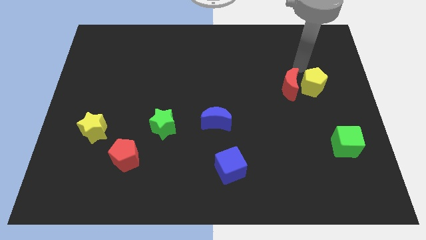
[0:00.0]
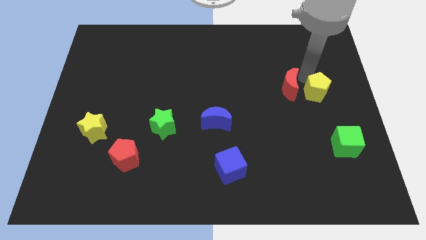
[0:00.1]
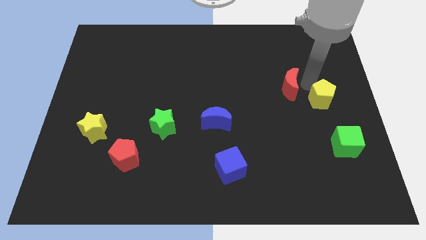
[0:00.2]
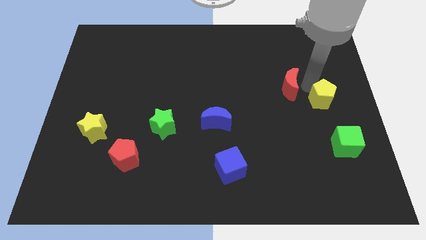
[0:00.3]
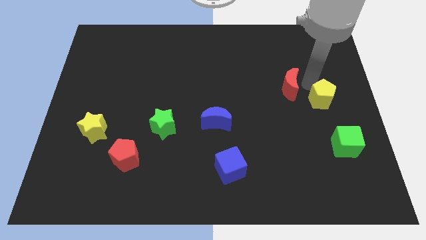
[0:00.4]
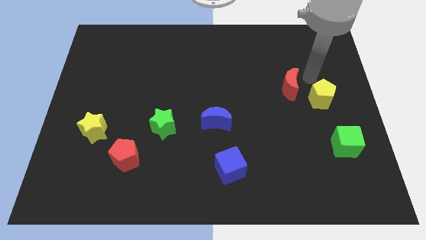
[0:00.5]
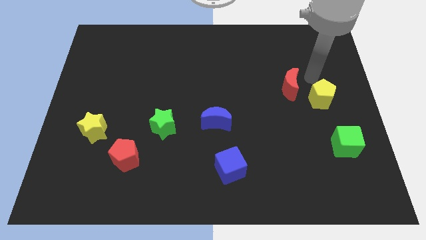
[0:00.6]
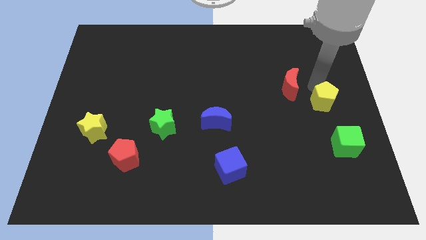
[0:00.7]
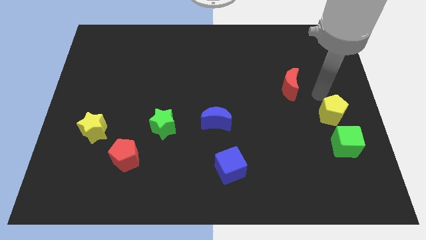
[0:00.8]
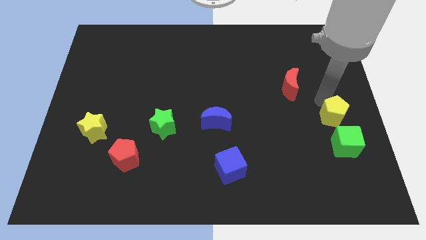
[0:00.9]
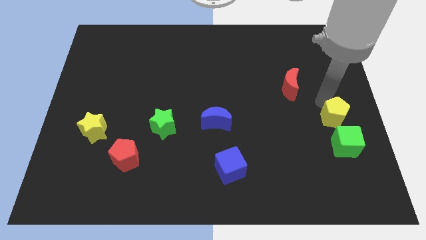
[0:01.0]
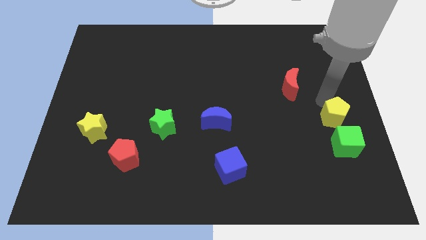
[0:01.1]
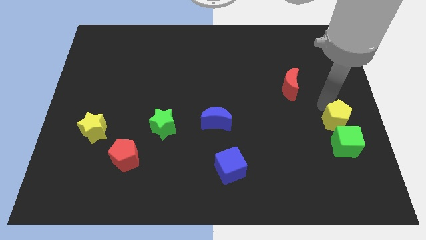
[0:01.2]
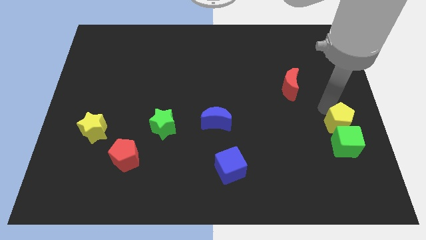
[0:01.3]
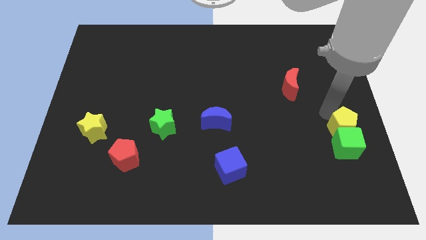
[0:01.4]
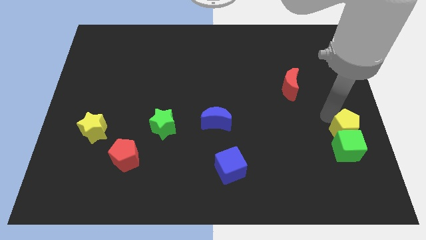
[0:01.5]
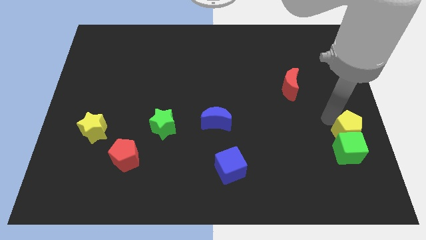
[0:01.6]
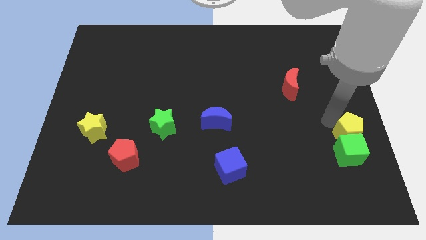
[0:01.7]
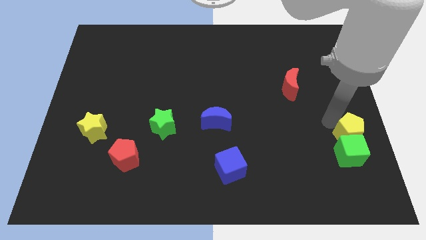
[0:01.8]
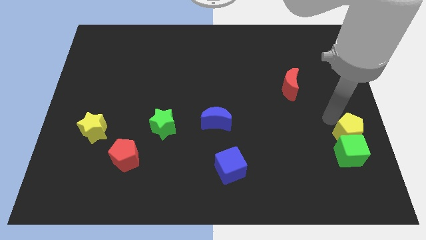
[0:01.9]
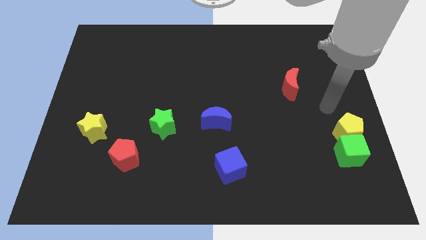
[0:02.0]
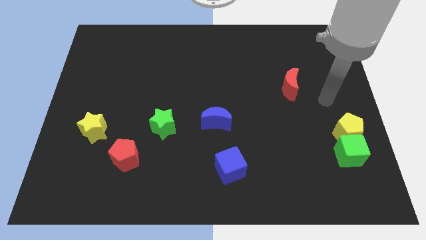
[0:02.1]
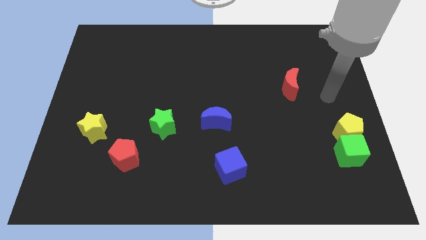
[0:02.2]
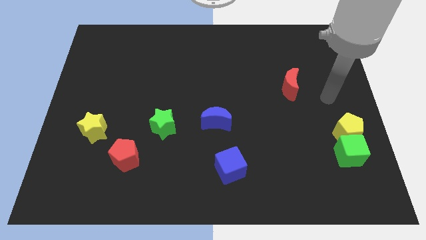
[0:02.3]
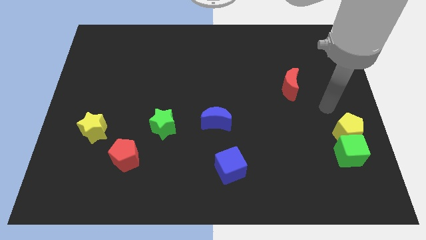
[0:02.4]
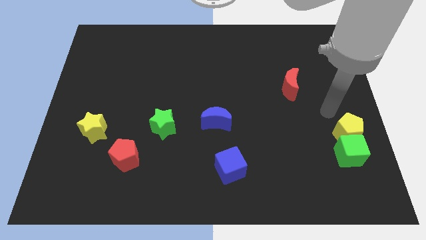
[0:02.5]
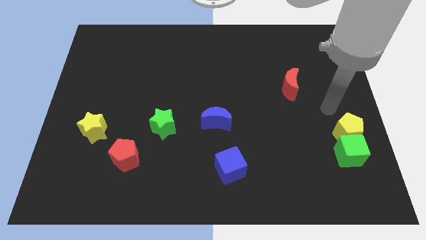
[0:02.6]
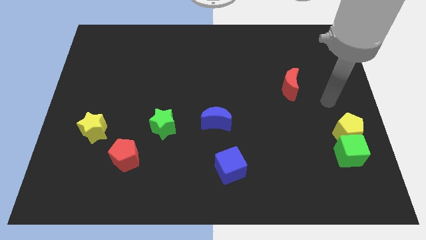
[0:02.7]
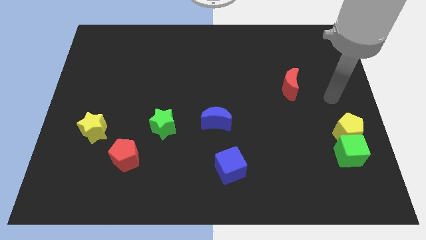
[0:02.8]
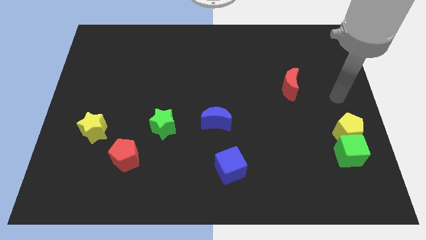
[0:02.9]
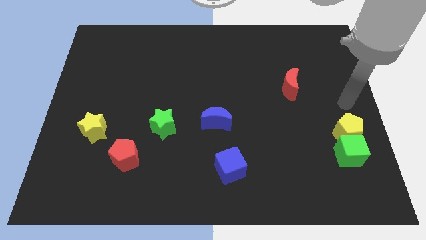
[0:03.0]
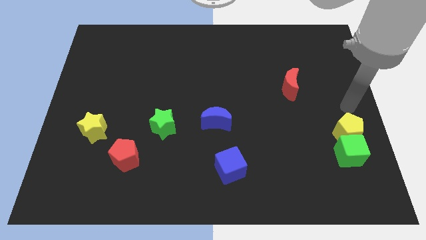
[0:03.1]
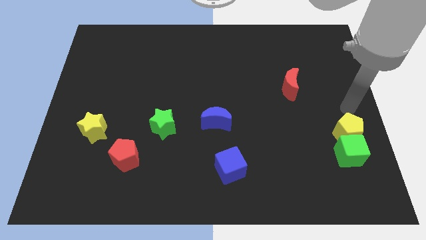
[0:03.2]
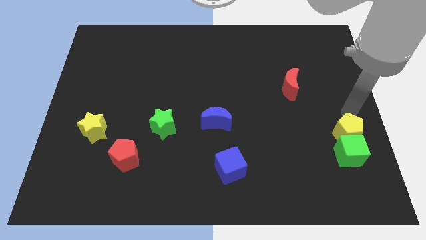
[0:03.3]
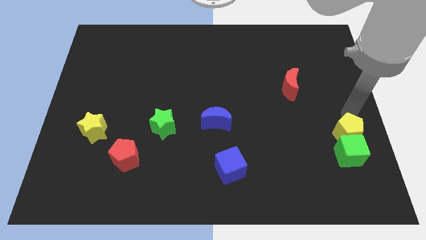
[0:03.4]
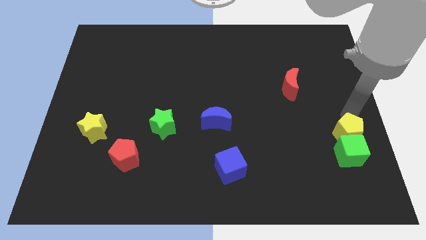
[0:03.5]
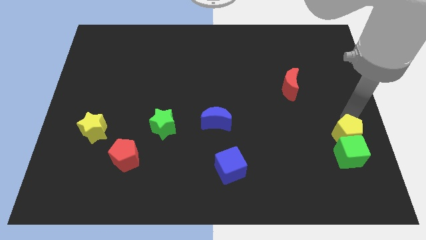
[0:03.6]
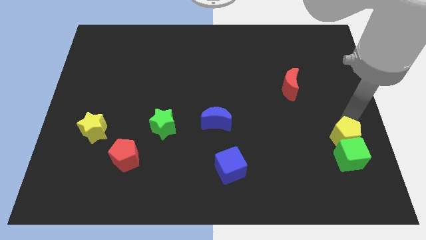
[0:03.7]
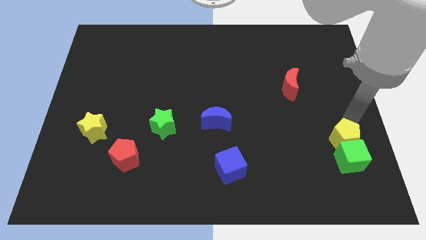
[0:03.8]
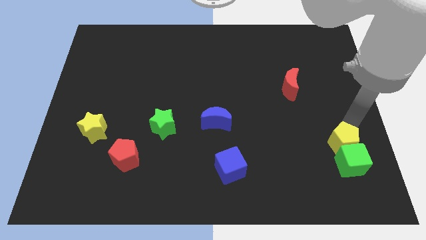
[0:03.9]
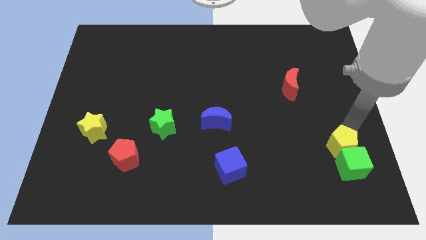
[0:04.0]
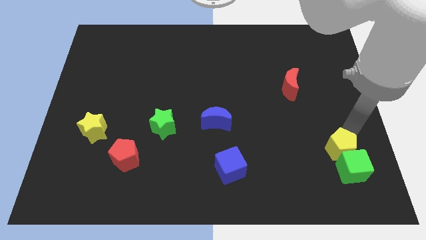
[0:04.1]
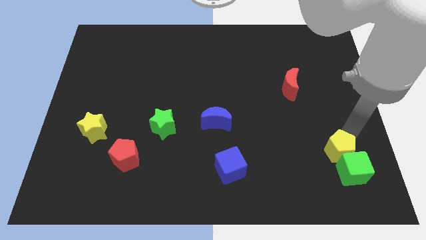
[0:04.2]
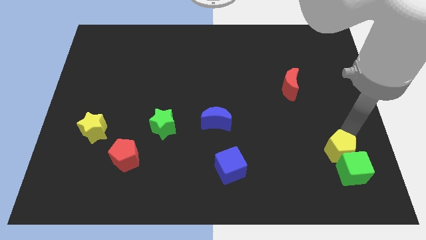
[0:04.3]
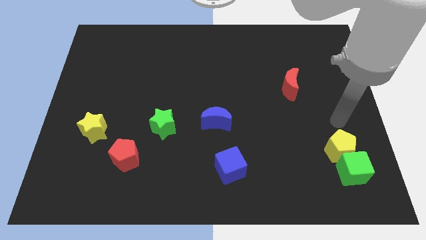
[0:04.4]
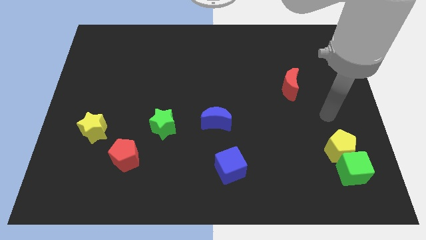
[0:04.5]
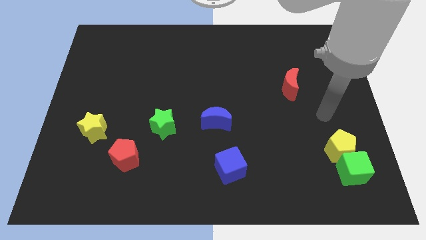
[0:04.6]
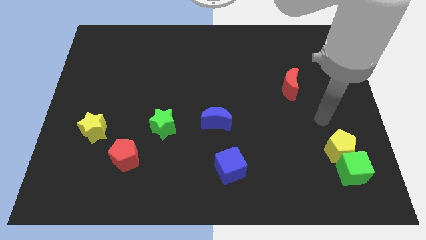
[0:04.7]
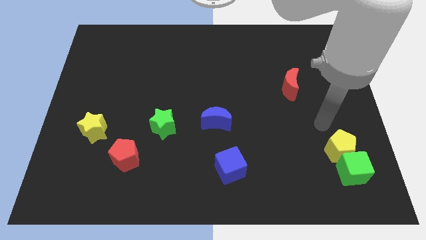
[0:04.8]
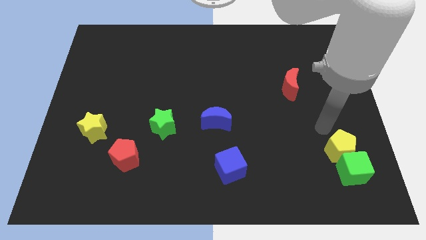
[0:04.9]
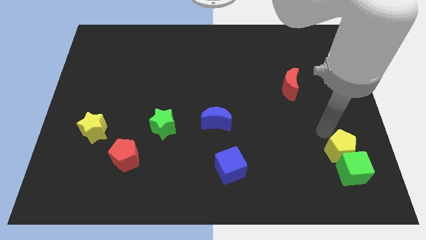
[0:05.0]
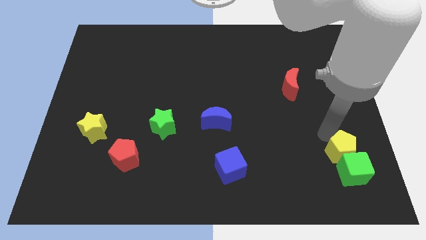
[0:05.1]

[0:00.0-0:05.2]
separate the yellow block from the red moon

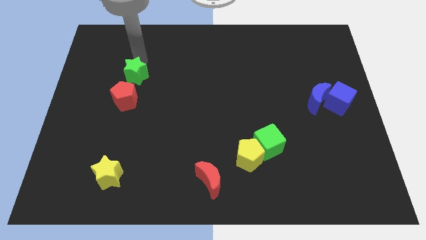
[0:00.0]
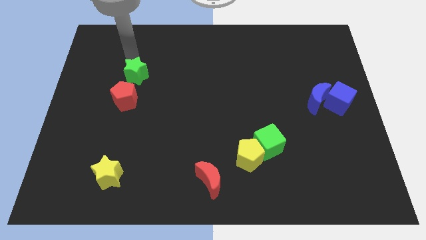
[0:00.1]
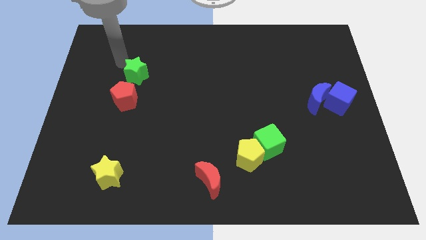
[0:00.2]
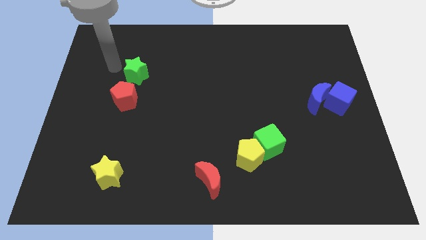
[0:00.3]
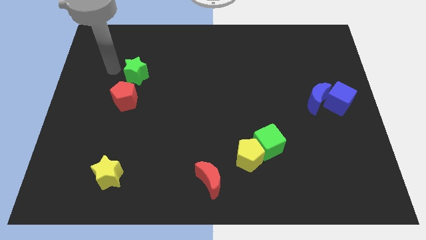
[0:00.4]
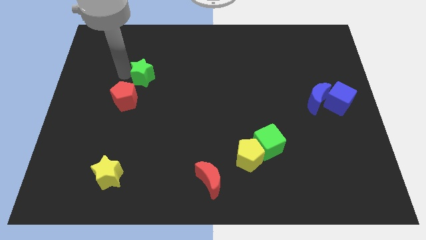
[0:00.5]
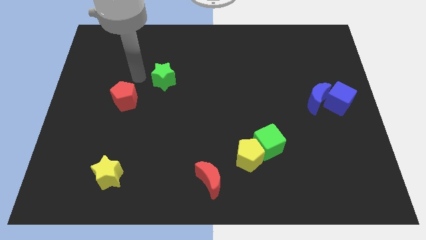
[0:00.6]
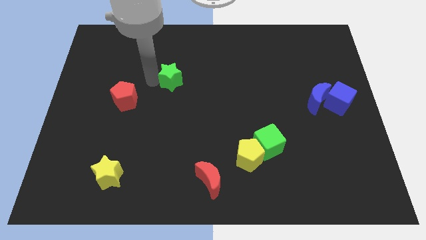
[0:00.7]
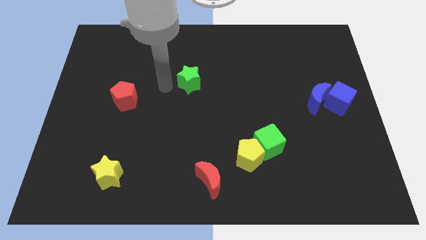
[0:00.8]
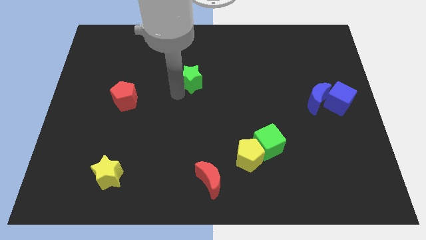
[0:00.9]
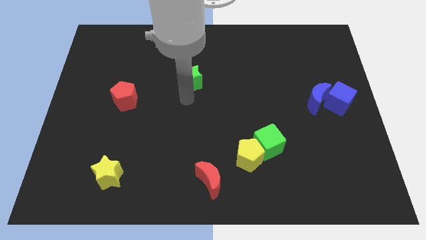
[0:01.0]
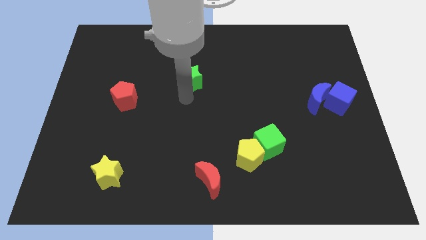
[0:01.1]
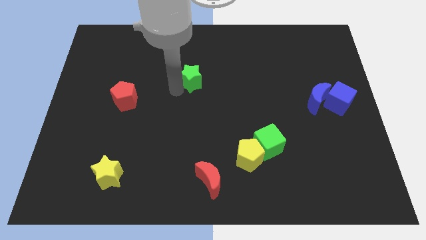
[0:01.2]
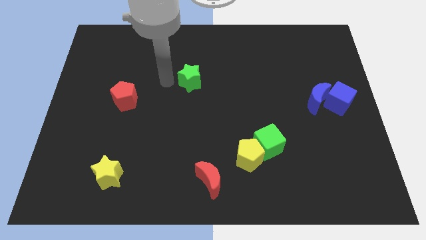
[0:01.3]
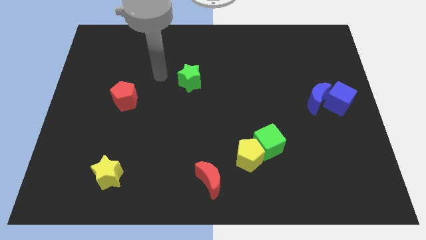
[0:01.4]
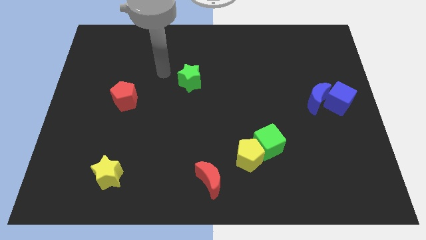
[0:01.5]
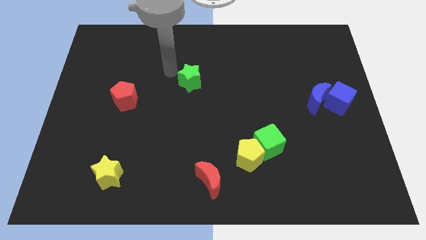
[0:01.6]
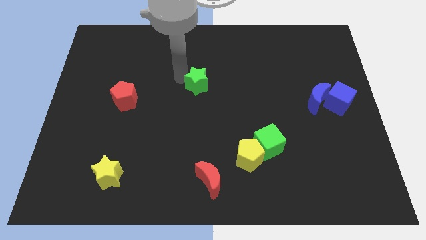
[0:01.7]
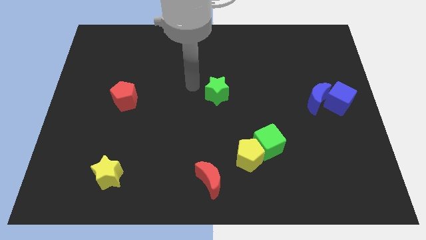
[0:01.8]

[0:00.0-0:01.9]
move green star towards the center

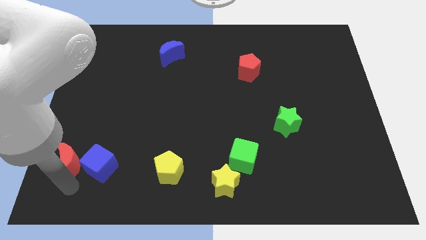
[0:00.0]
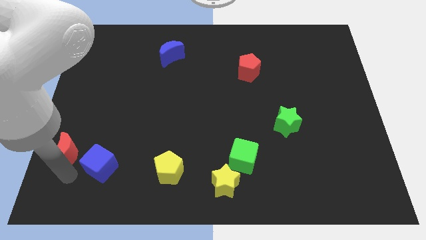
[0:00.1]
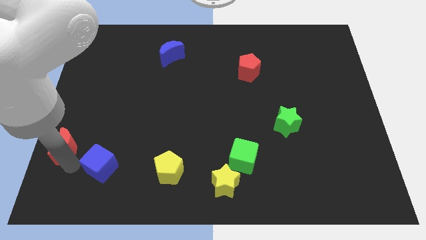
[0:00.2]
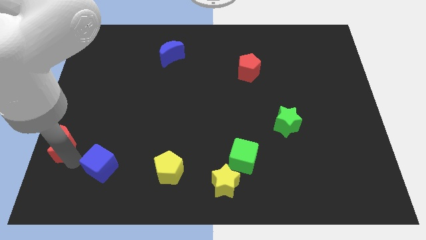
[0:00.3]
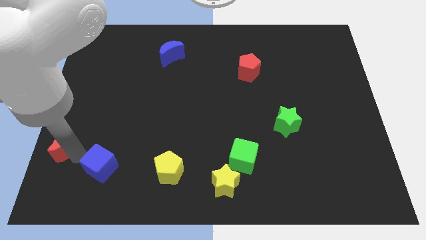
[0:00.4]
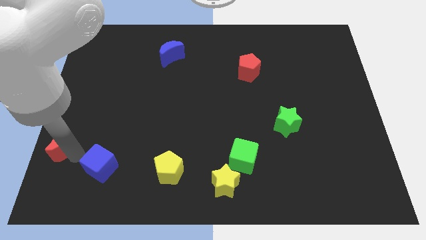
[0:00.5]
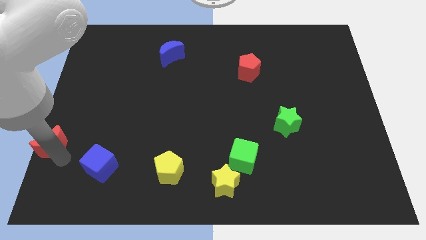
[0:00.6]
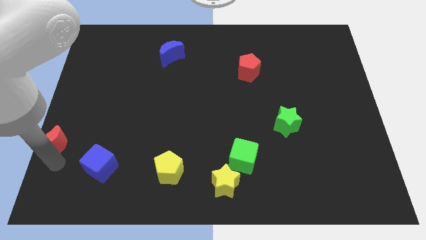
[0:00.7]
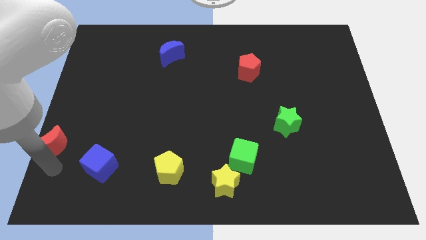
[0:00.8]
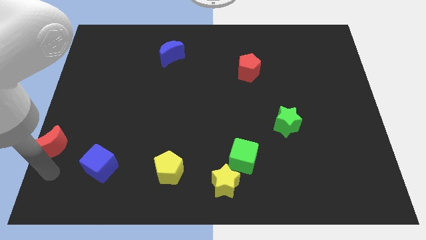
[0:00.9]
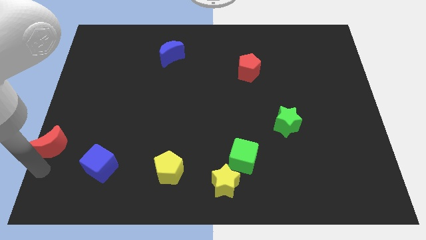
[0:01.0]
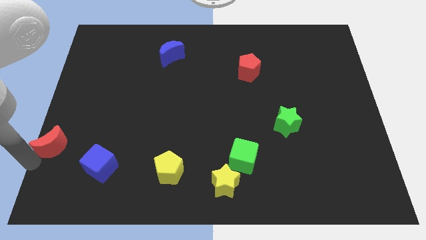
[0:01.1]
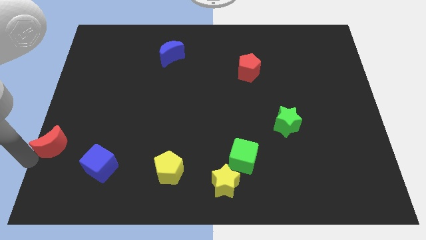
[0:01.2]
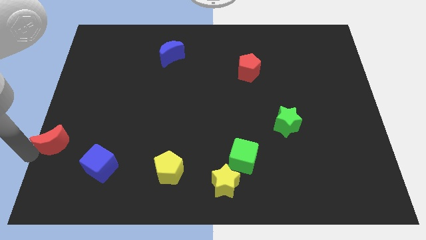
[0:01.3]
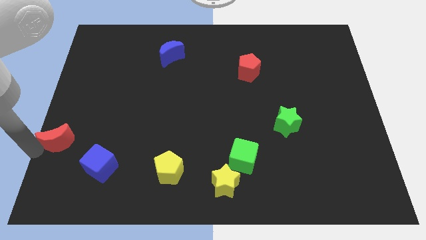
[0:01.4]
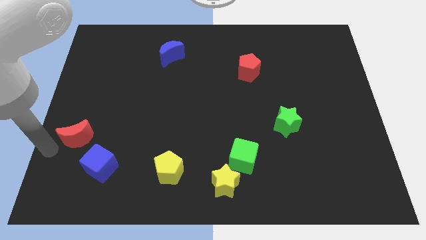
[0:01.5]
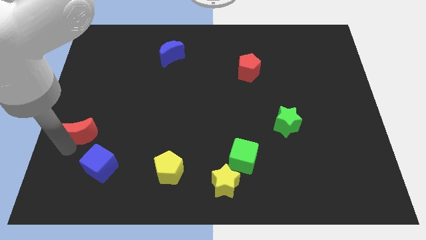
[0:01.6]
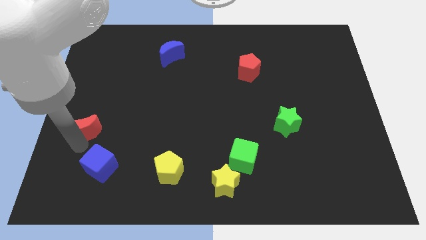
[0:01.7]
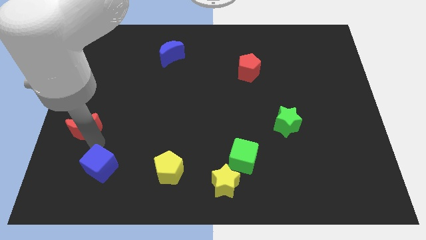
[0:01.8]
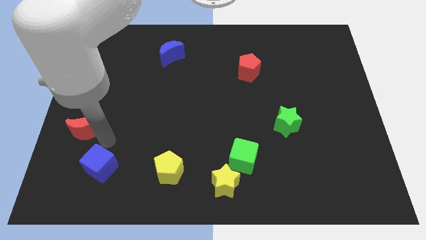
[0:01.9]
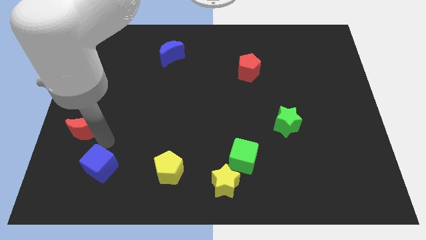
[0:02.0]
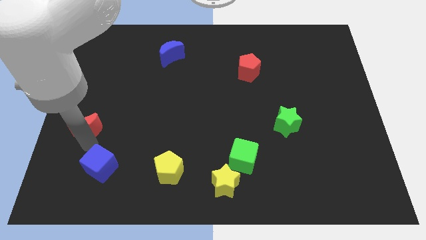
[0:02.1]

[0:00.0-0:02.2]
move the red crescent away from the blue cube
